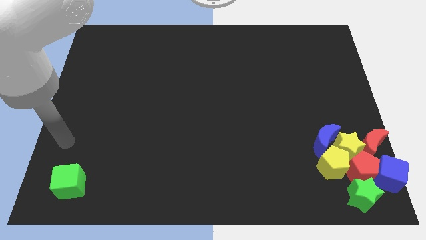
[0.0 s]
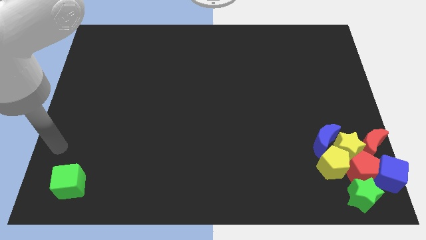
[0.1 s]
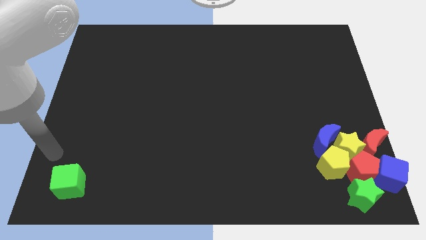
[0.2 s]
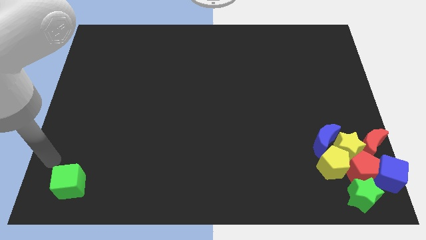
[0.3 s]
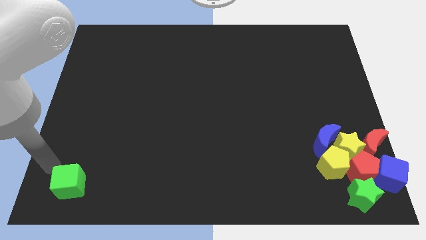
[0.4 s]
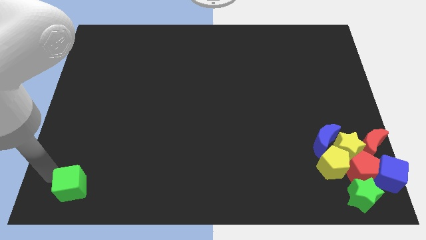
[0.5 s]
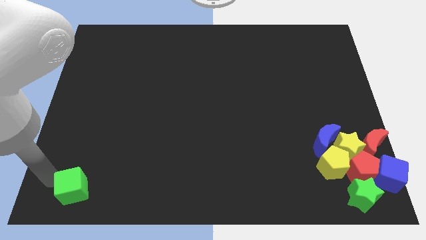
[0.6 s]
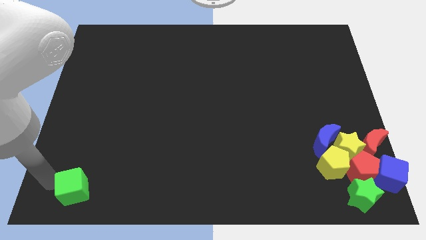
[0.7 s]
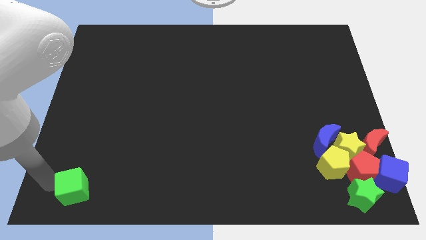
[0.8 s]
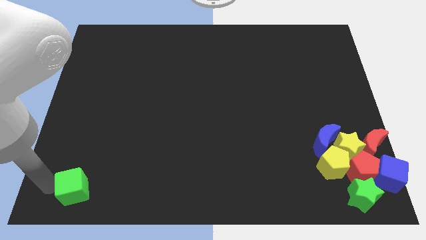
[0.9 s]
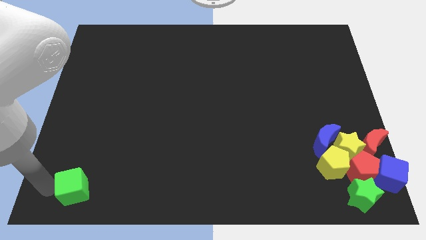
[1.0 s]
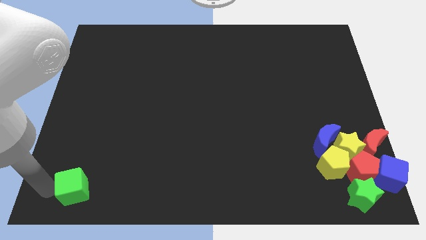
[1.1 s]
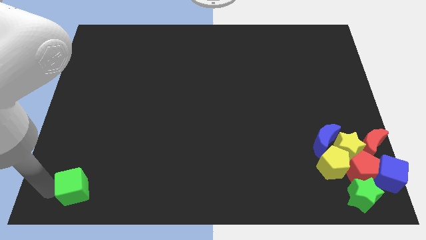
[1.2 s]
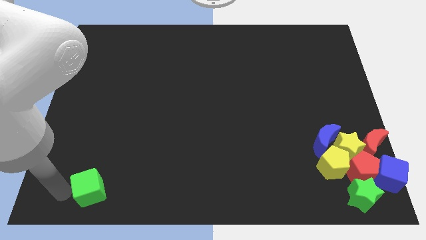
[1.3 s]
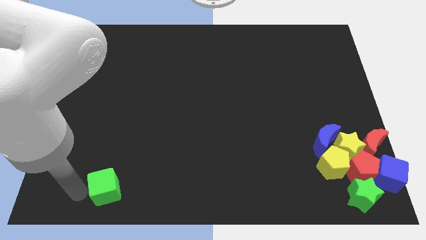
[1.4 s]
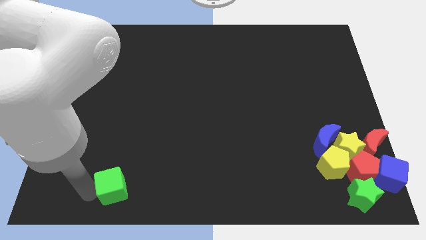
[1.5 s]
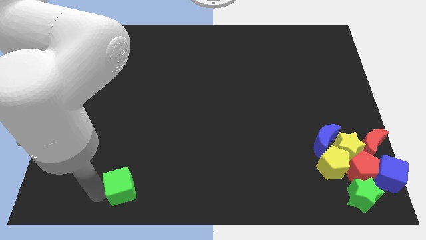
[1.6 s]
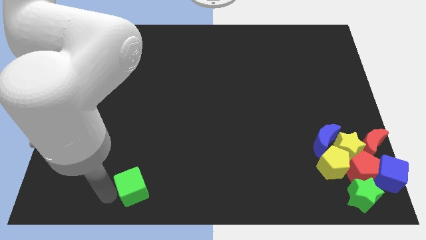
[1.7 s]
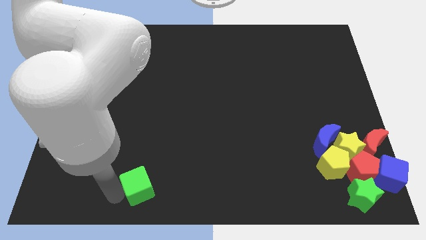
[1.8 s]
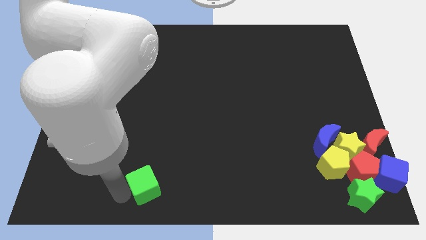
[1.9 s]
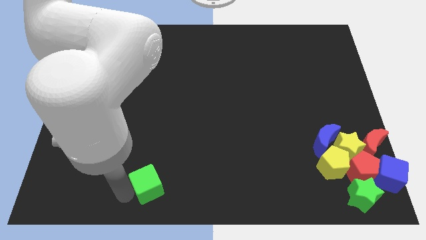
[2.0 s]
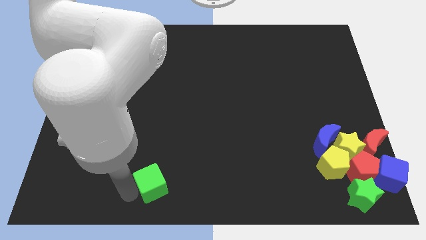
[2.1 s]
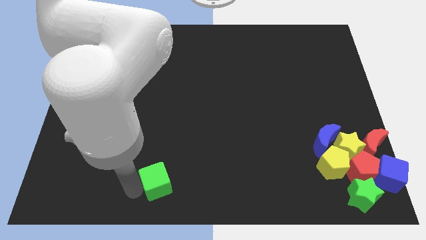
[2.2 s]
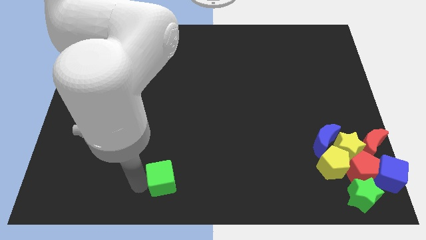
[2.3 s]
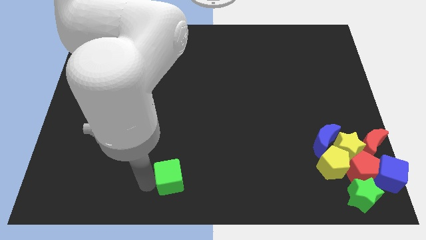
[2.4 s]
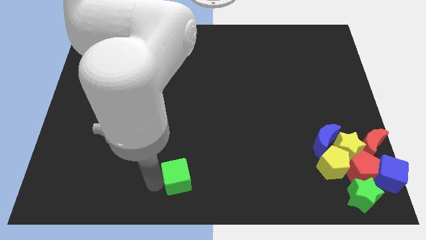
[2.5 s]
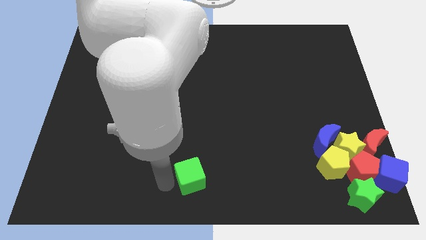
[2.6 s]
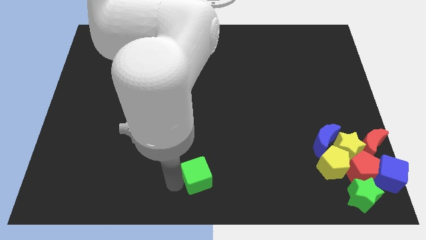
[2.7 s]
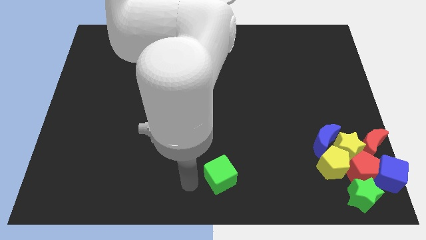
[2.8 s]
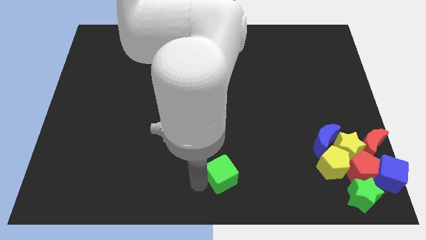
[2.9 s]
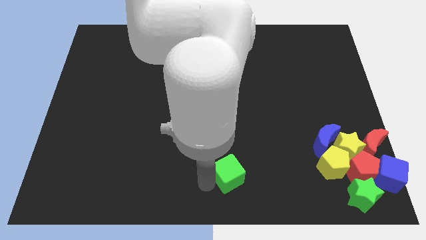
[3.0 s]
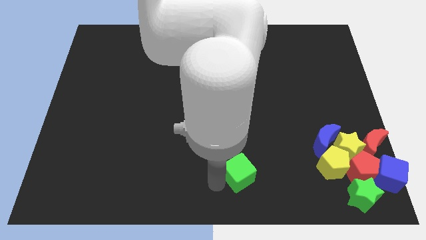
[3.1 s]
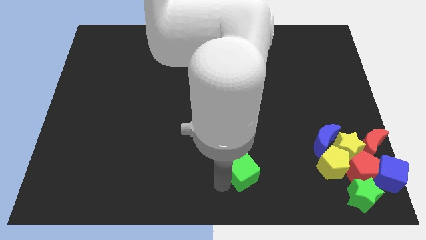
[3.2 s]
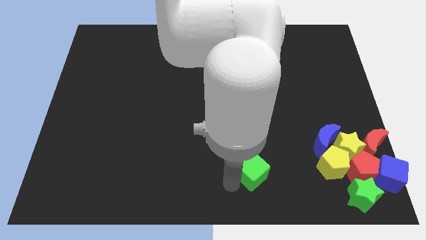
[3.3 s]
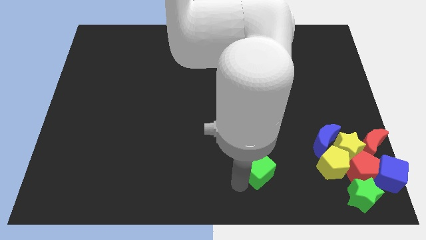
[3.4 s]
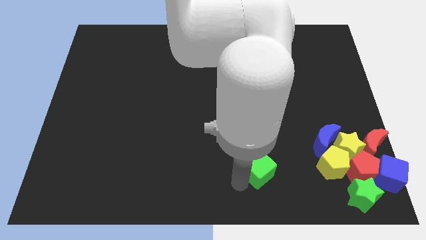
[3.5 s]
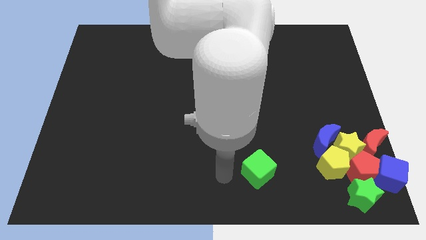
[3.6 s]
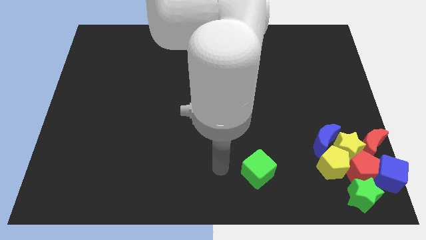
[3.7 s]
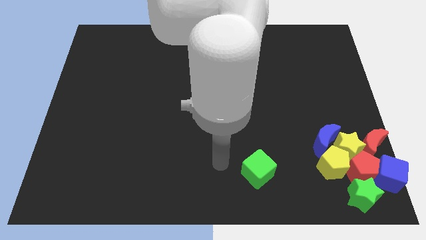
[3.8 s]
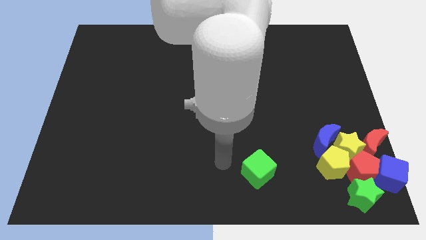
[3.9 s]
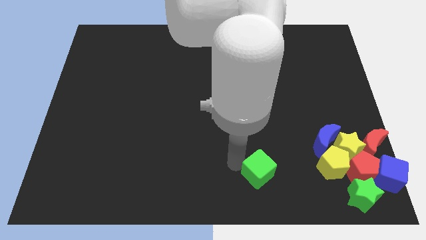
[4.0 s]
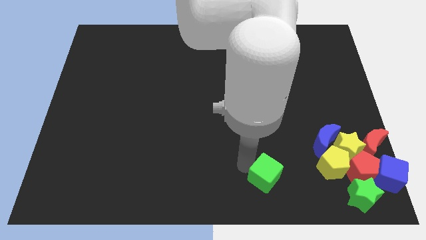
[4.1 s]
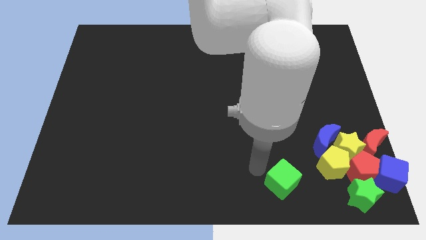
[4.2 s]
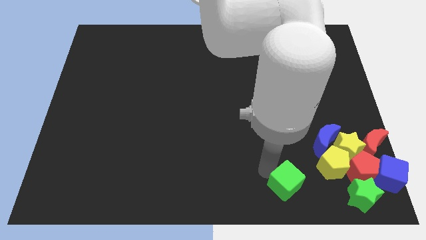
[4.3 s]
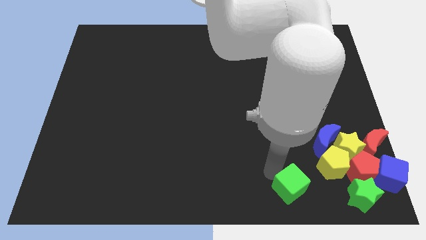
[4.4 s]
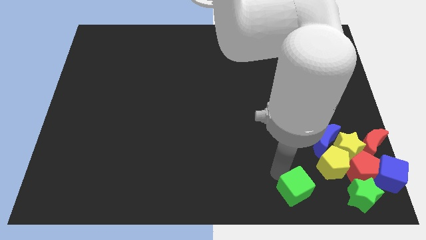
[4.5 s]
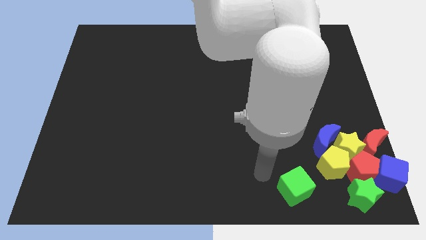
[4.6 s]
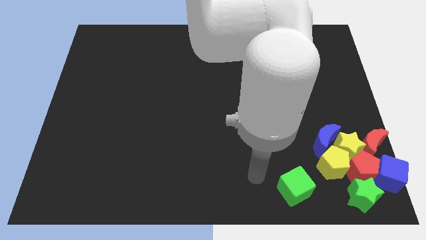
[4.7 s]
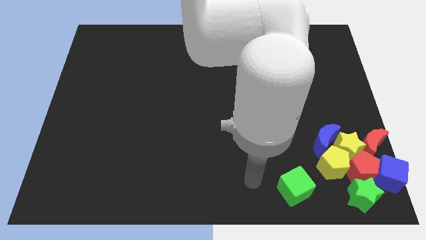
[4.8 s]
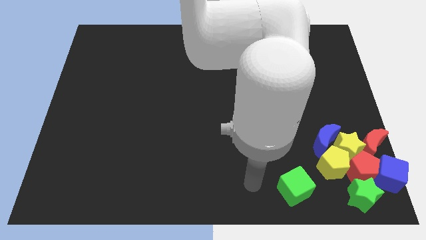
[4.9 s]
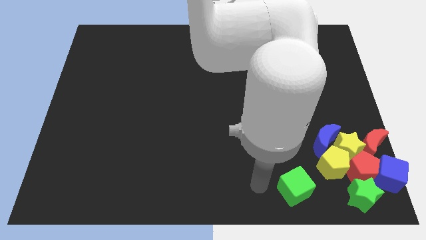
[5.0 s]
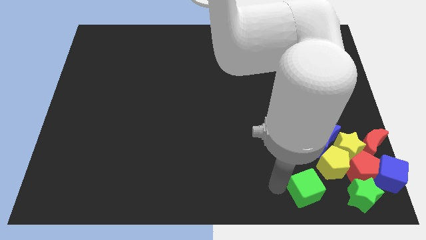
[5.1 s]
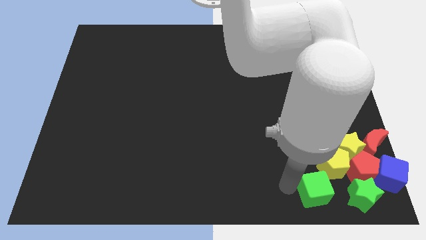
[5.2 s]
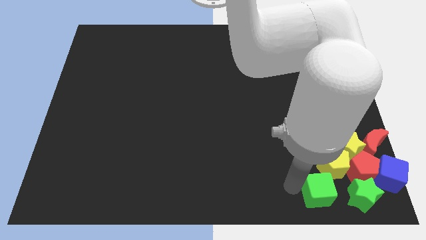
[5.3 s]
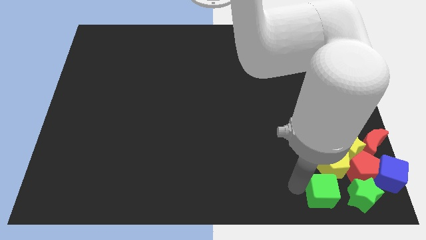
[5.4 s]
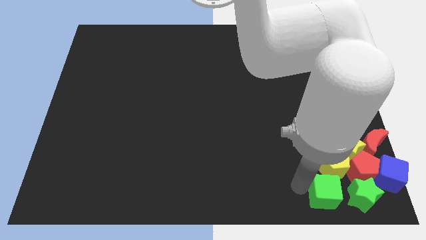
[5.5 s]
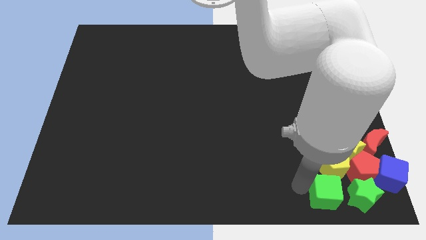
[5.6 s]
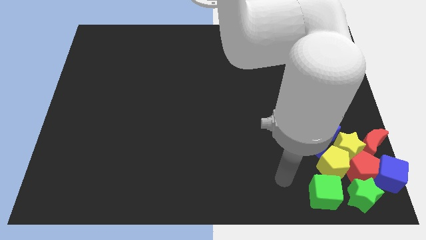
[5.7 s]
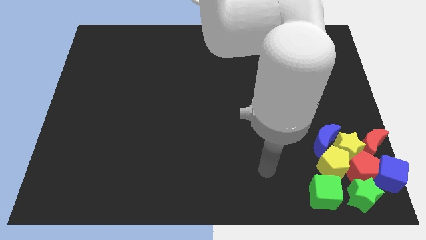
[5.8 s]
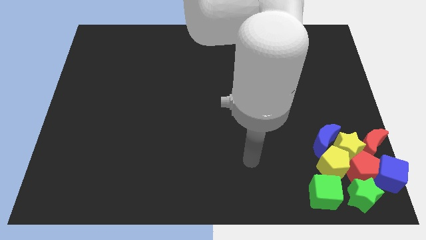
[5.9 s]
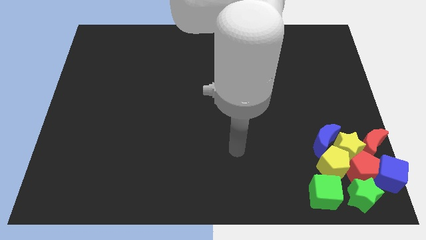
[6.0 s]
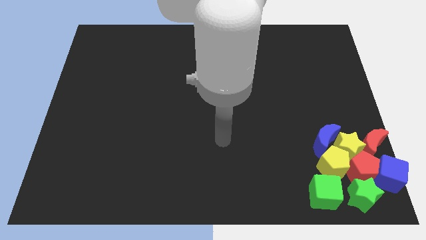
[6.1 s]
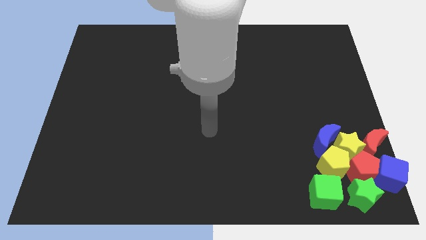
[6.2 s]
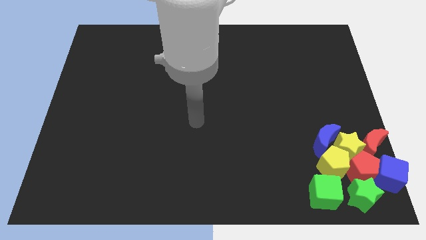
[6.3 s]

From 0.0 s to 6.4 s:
push the green cube to the bottom side of the yellow pentagon

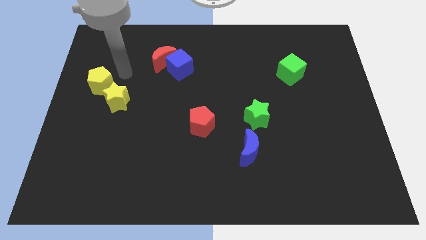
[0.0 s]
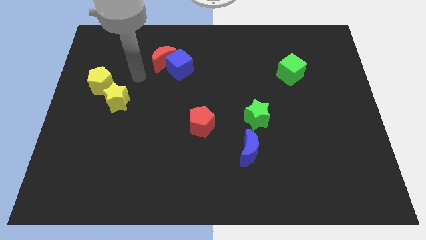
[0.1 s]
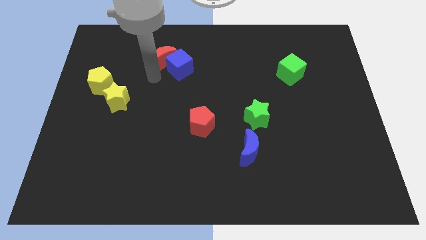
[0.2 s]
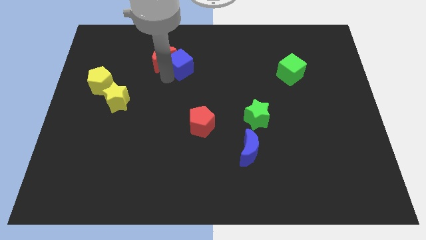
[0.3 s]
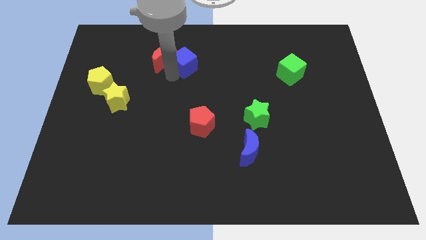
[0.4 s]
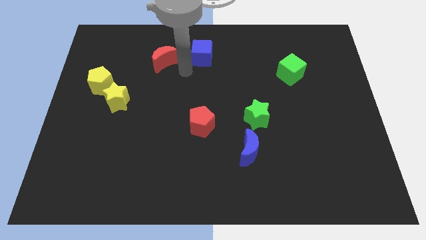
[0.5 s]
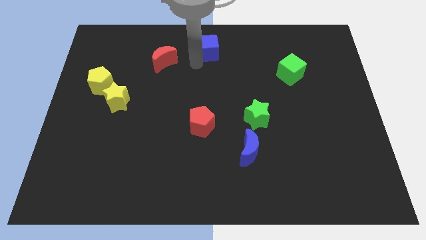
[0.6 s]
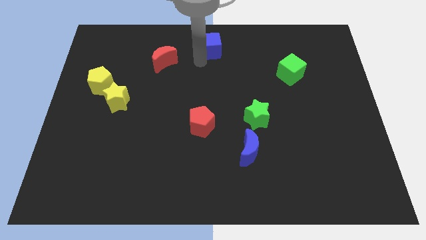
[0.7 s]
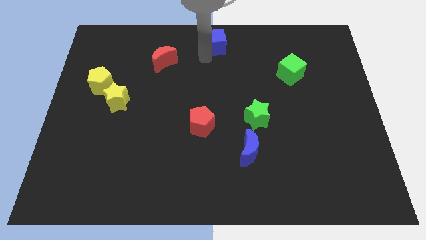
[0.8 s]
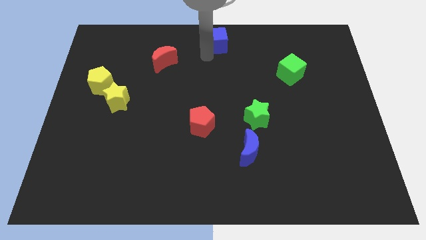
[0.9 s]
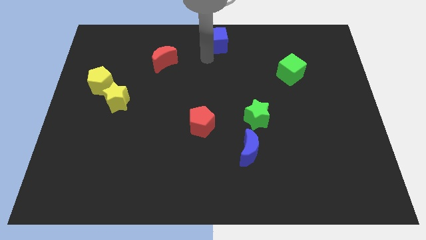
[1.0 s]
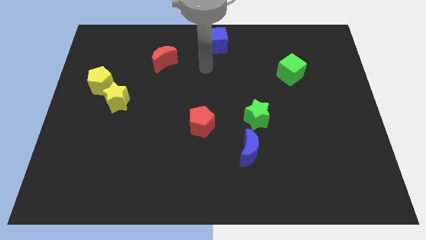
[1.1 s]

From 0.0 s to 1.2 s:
push the blue cube to the top center of the board

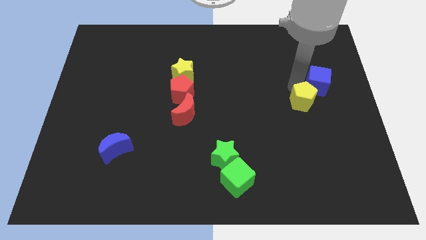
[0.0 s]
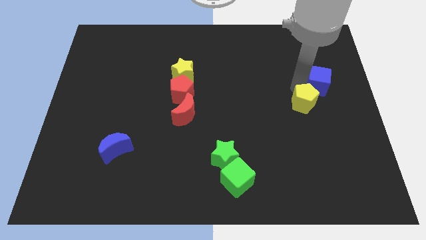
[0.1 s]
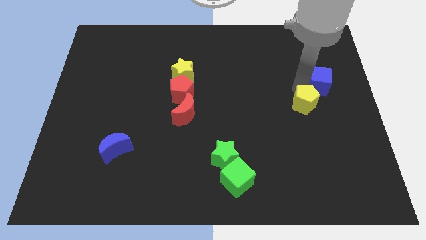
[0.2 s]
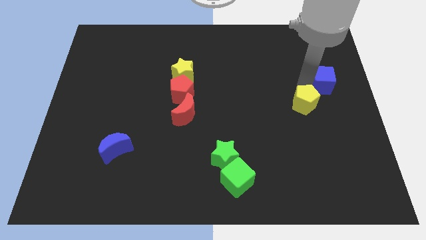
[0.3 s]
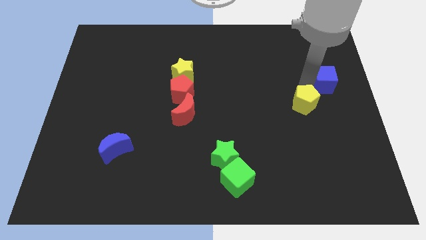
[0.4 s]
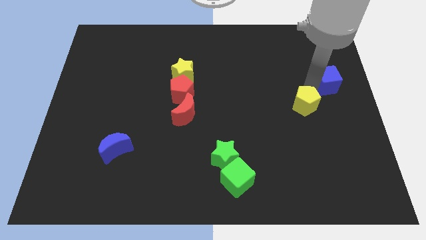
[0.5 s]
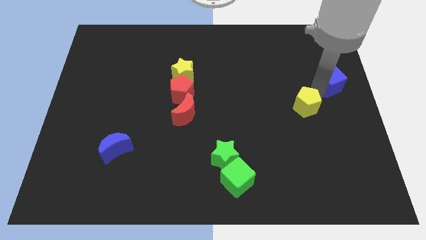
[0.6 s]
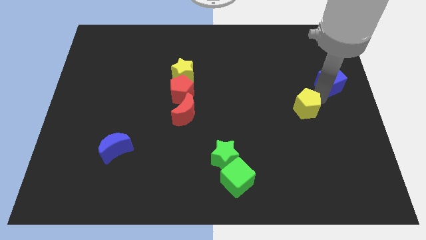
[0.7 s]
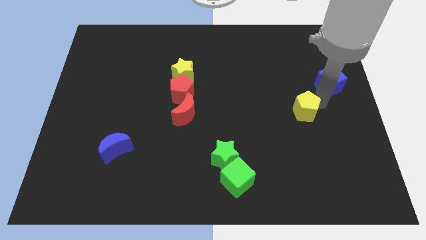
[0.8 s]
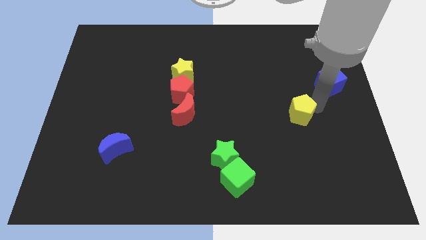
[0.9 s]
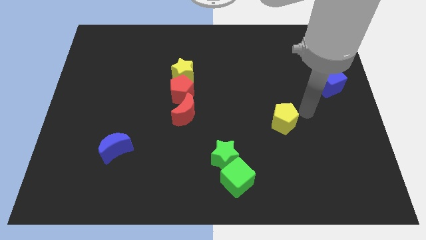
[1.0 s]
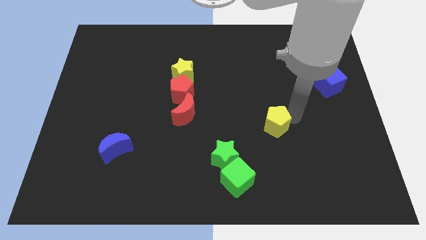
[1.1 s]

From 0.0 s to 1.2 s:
separate yellow pentagon and blue cube from each other
